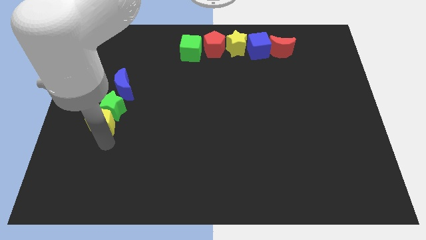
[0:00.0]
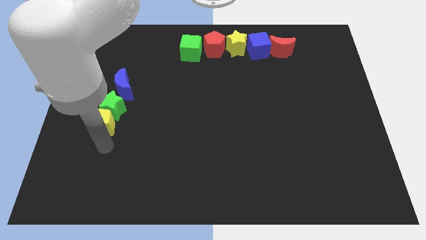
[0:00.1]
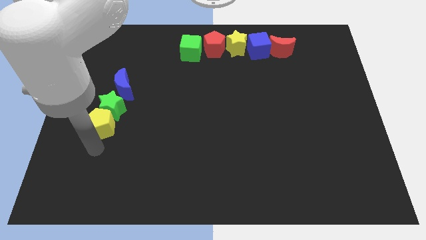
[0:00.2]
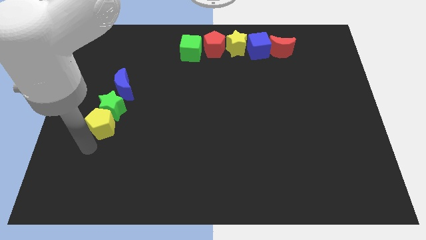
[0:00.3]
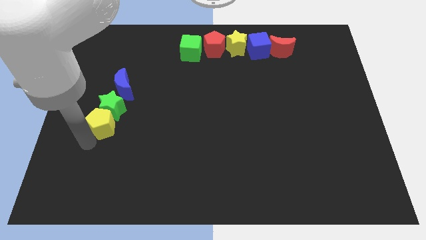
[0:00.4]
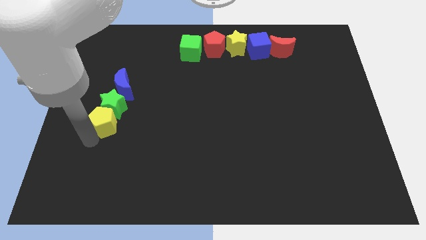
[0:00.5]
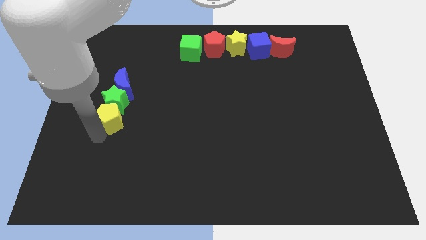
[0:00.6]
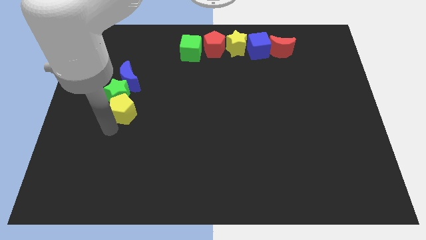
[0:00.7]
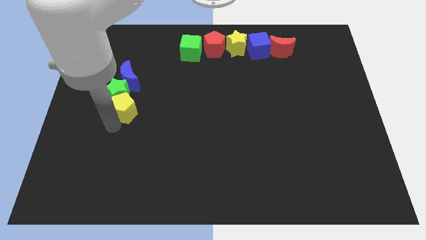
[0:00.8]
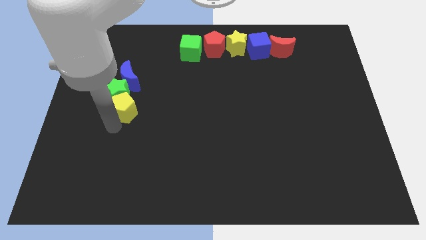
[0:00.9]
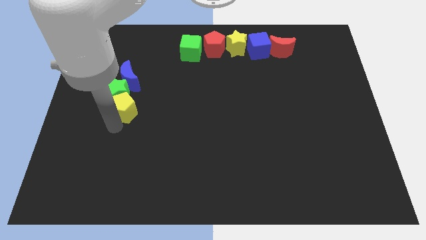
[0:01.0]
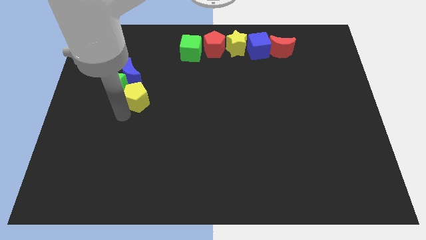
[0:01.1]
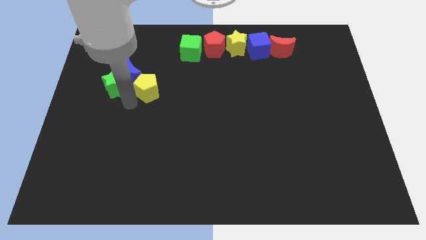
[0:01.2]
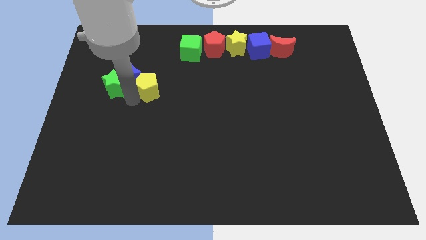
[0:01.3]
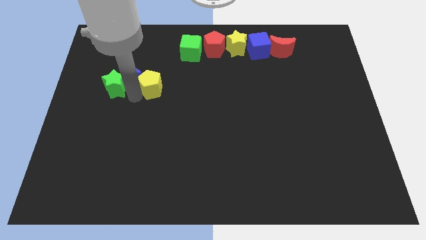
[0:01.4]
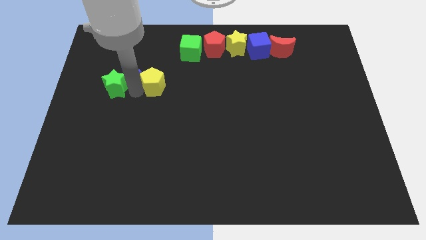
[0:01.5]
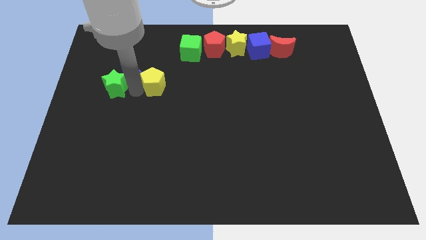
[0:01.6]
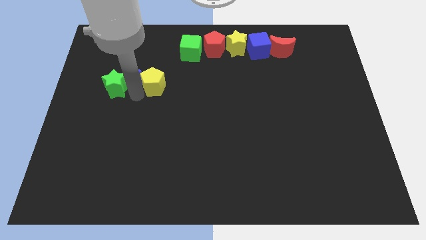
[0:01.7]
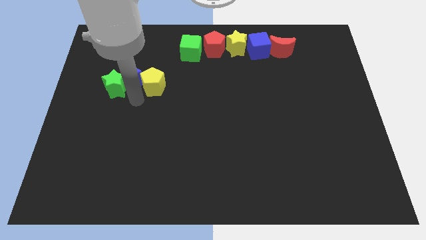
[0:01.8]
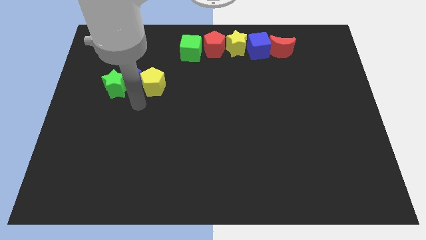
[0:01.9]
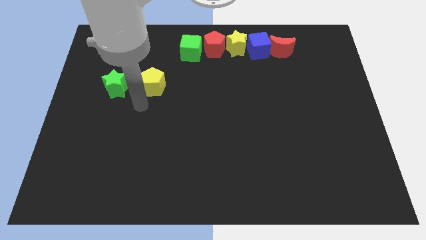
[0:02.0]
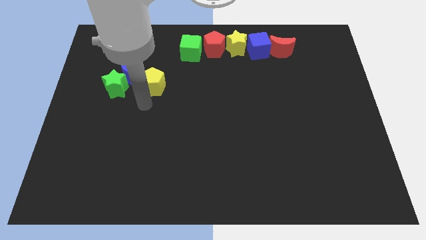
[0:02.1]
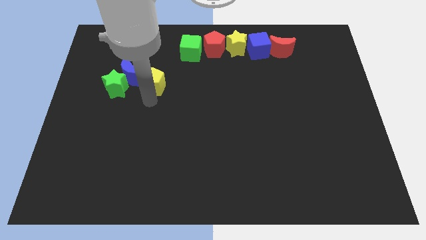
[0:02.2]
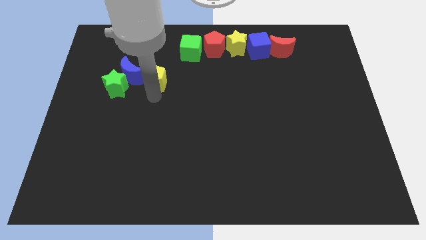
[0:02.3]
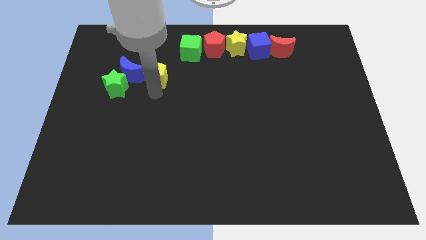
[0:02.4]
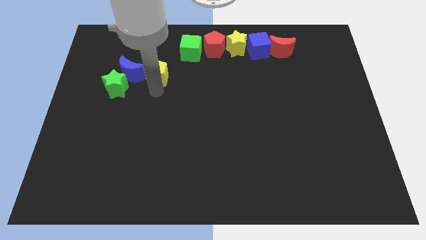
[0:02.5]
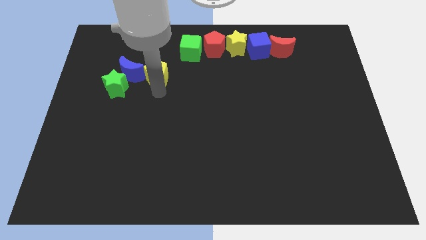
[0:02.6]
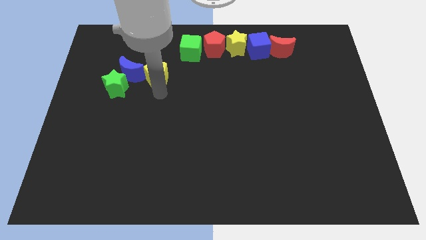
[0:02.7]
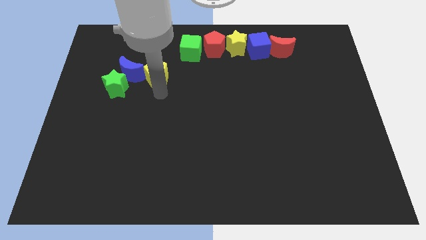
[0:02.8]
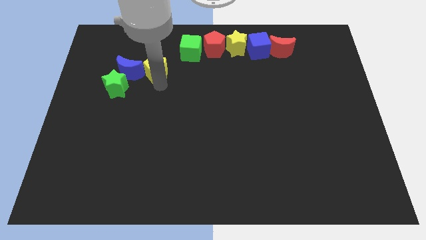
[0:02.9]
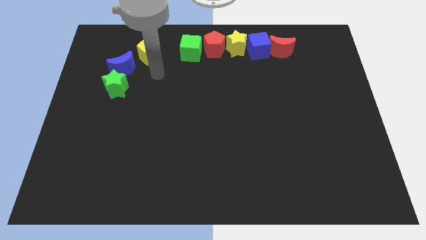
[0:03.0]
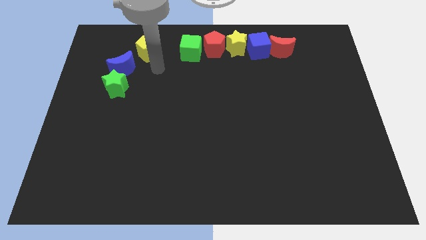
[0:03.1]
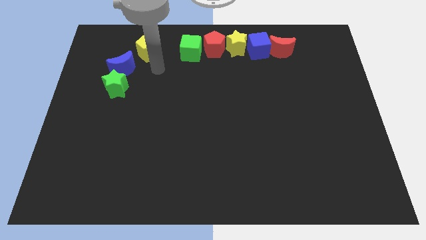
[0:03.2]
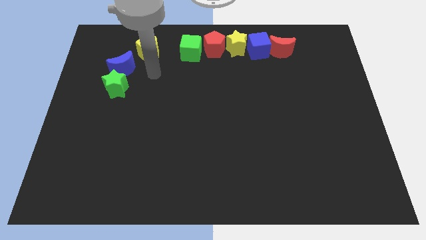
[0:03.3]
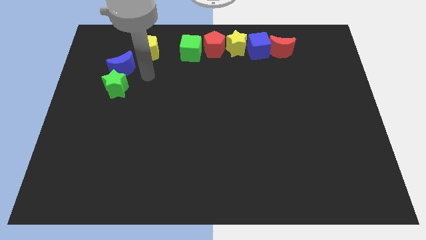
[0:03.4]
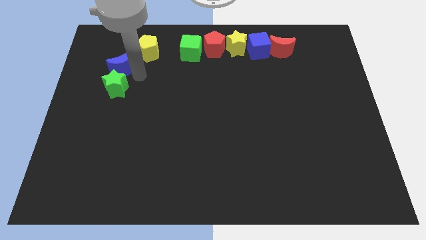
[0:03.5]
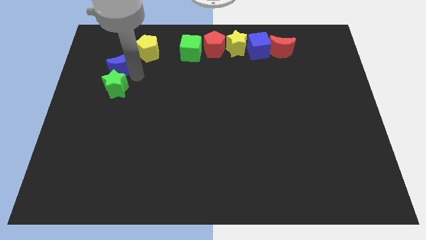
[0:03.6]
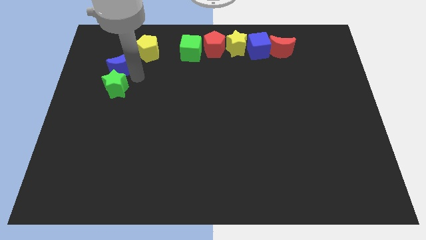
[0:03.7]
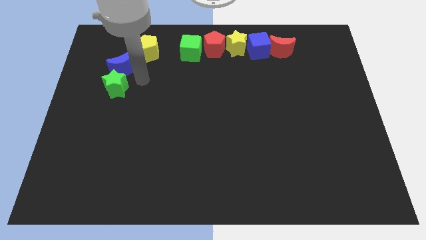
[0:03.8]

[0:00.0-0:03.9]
push the green star and yellow pentagon diagonal to each other

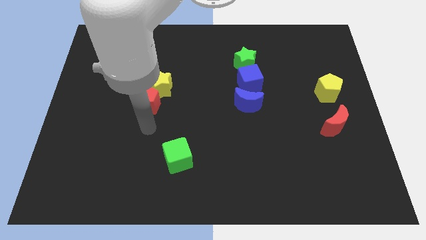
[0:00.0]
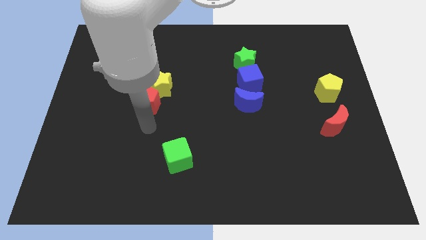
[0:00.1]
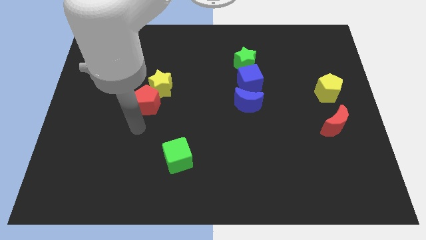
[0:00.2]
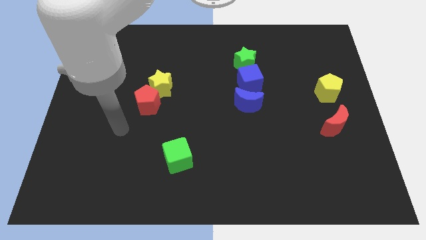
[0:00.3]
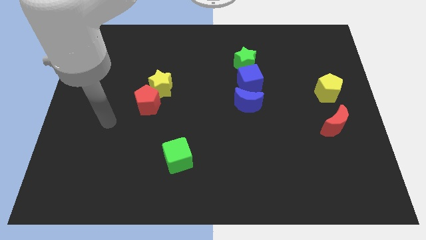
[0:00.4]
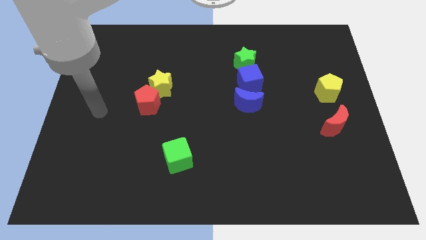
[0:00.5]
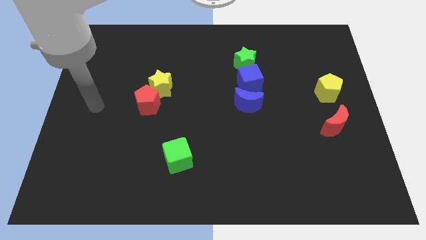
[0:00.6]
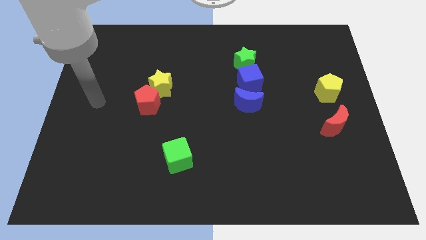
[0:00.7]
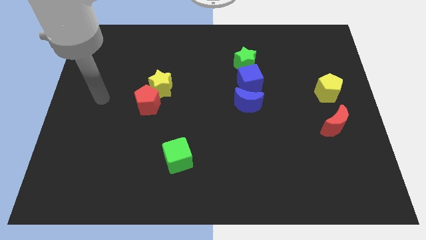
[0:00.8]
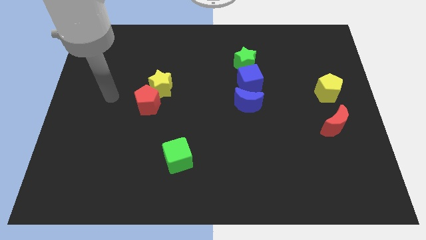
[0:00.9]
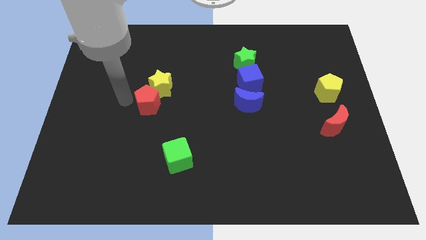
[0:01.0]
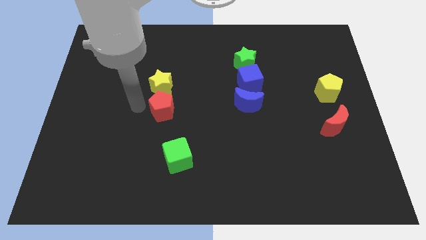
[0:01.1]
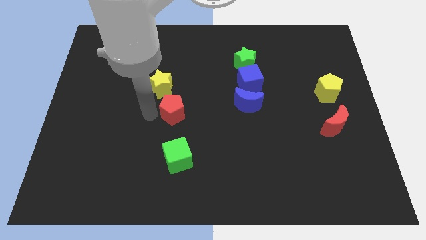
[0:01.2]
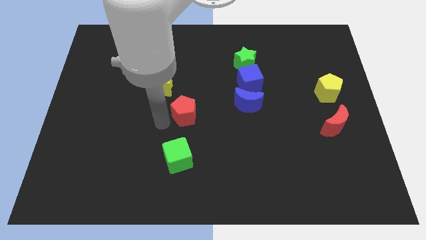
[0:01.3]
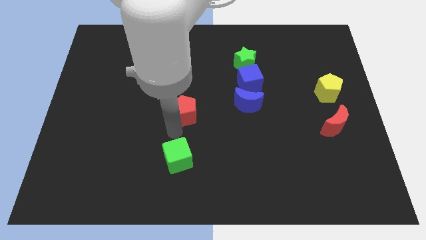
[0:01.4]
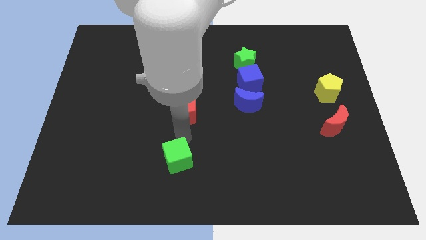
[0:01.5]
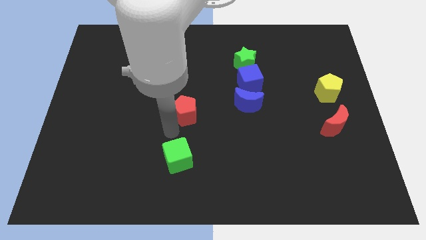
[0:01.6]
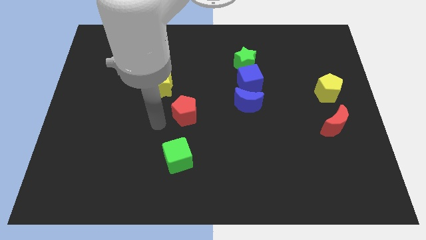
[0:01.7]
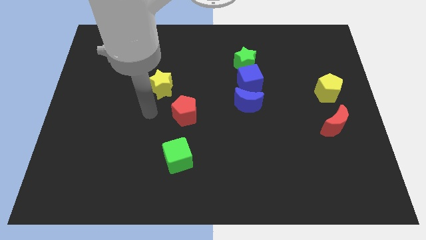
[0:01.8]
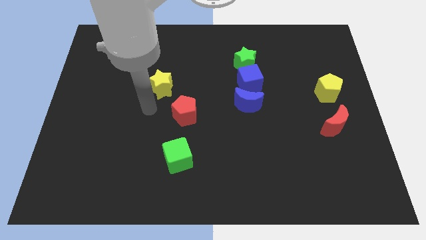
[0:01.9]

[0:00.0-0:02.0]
separate the red pentagon from the yellow star

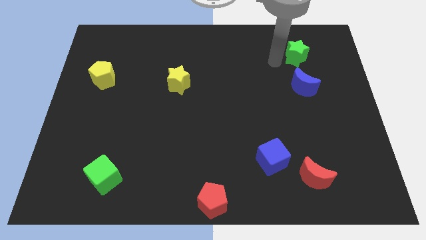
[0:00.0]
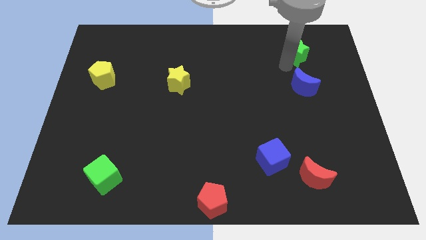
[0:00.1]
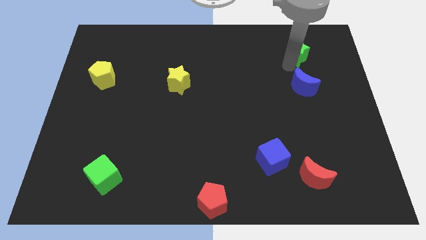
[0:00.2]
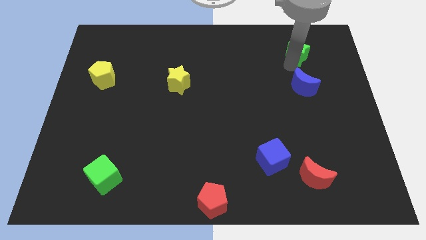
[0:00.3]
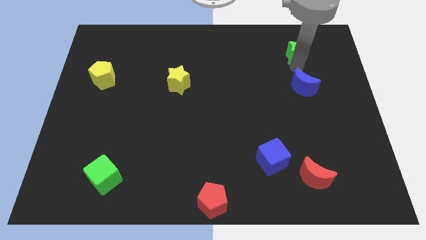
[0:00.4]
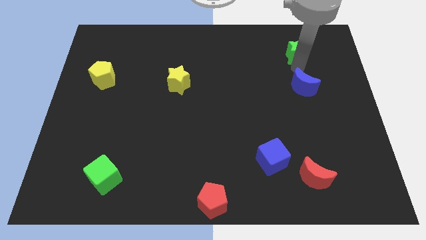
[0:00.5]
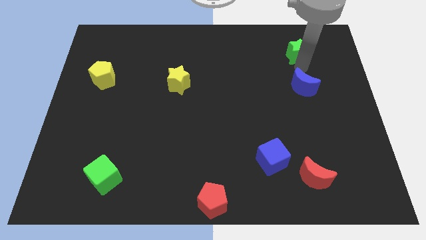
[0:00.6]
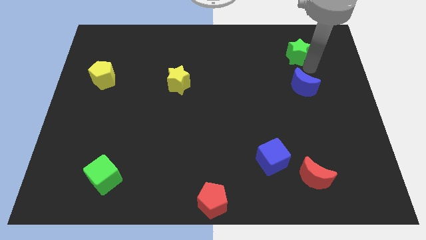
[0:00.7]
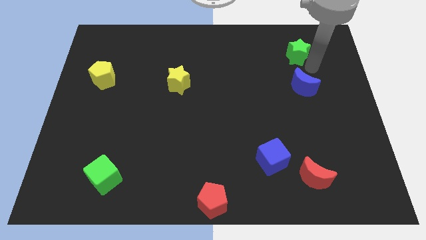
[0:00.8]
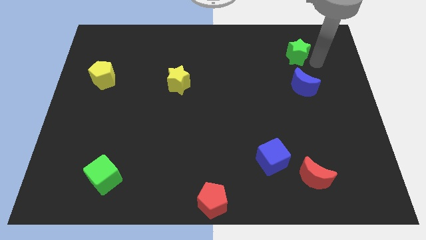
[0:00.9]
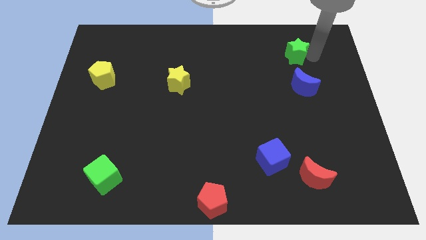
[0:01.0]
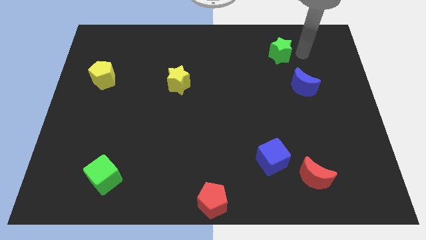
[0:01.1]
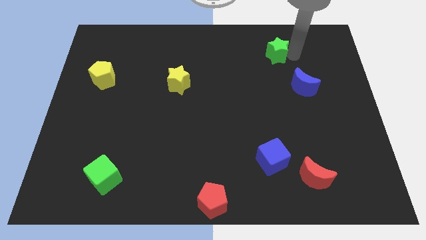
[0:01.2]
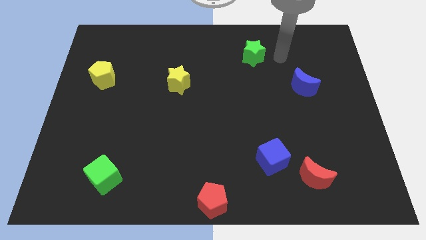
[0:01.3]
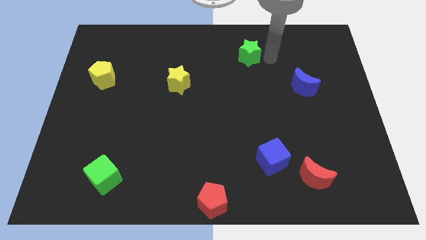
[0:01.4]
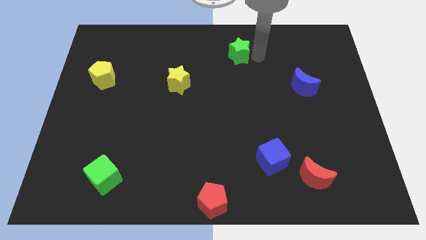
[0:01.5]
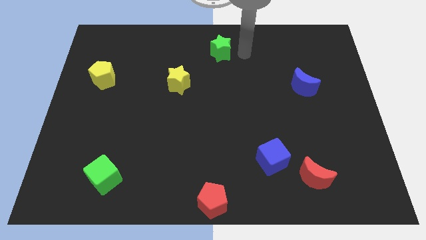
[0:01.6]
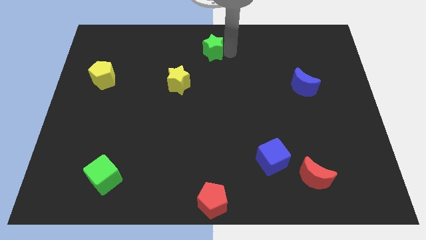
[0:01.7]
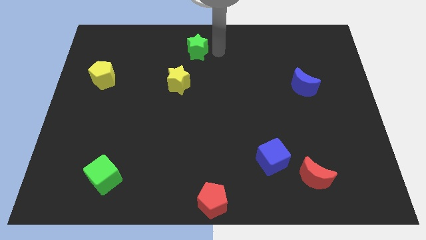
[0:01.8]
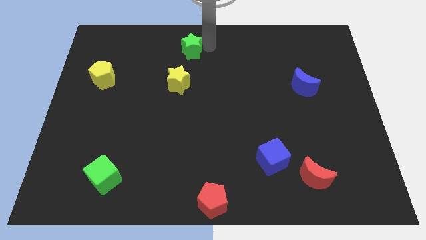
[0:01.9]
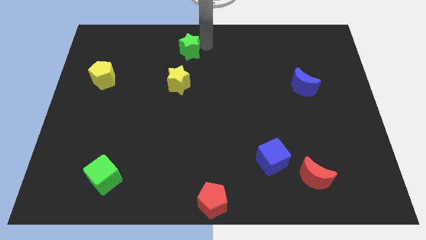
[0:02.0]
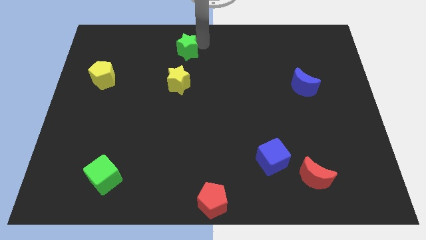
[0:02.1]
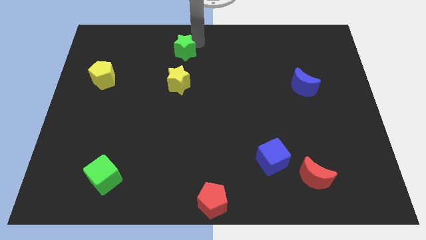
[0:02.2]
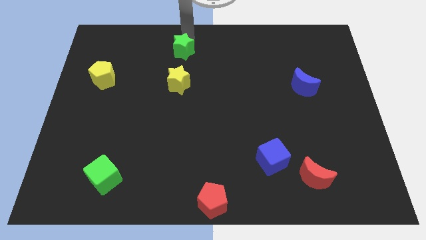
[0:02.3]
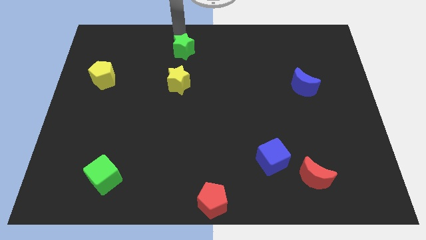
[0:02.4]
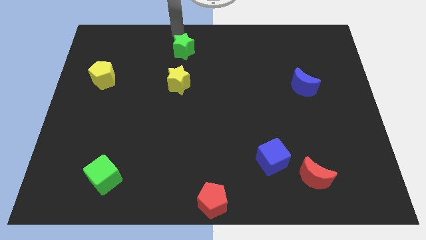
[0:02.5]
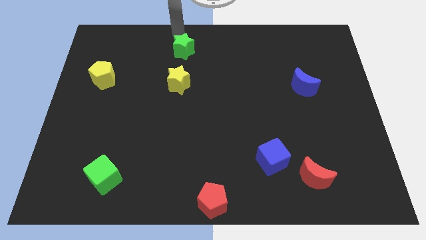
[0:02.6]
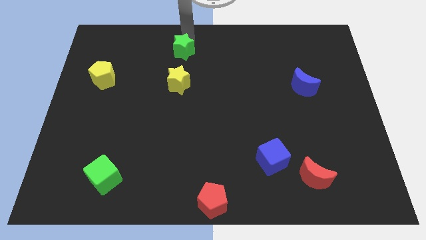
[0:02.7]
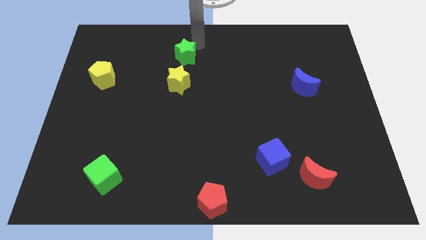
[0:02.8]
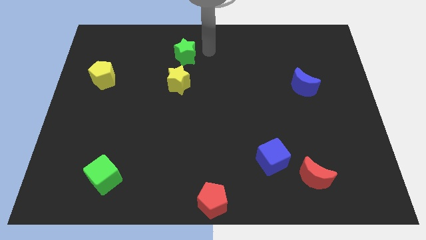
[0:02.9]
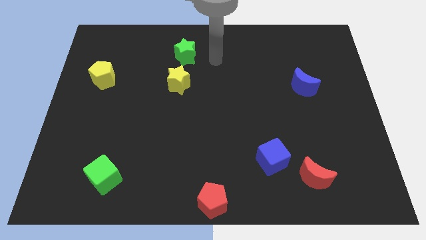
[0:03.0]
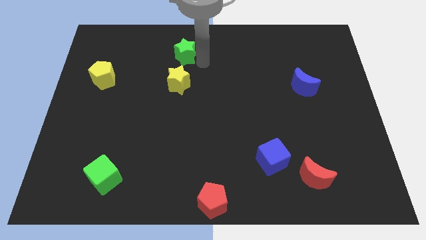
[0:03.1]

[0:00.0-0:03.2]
place the green star at the top of yellow star
